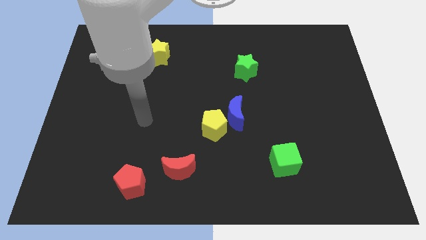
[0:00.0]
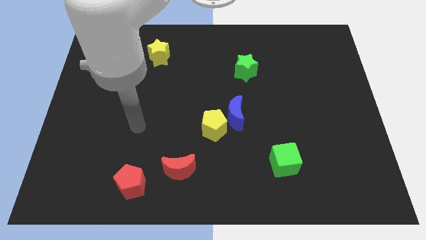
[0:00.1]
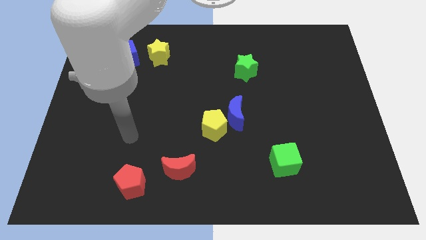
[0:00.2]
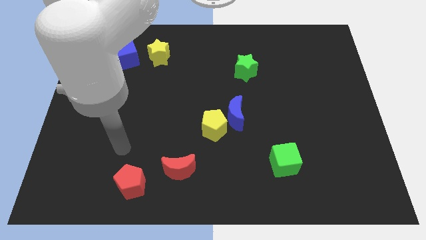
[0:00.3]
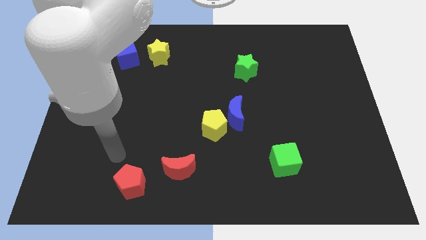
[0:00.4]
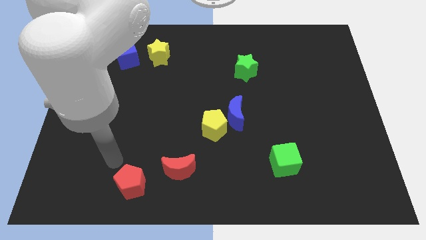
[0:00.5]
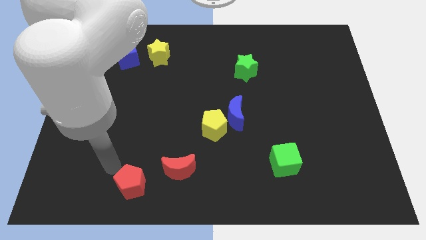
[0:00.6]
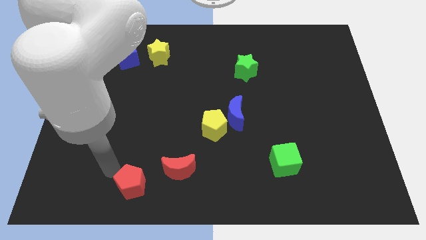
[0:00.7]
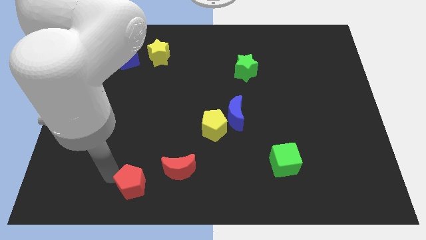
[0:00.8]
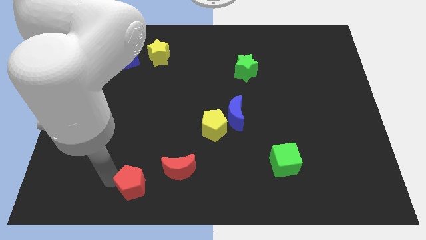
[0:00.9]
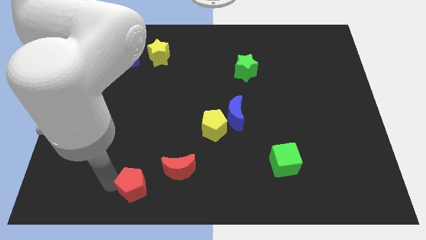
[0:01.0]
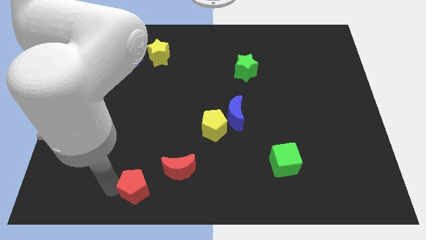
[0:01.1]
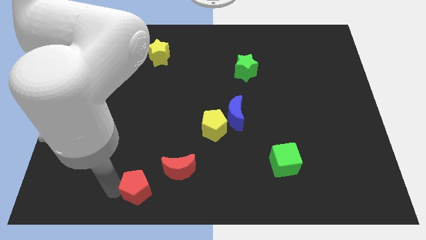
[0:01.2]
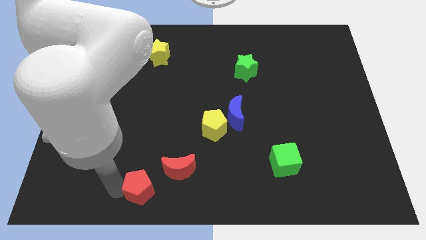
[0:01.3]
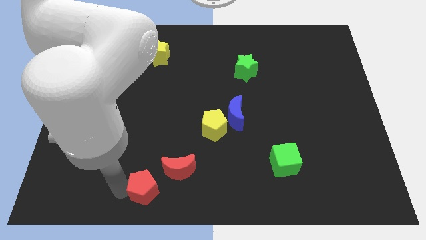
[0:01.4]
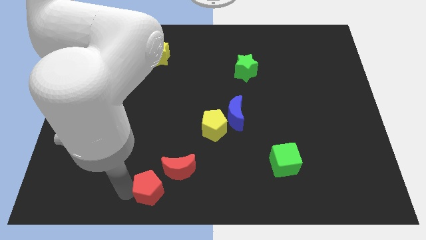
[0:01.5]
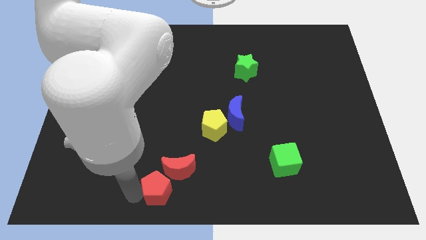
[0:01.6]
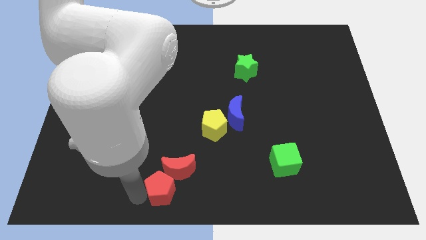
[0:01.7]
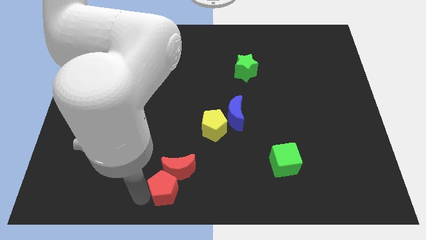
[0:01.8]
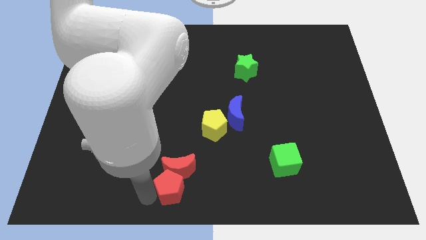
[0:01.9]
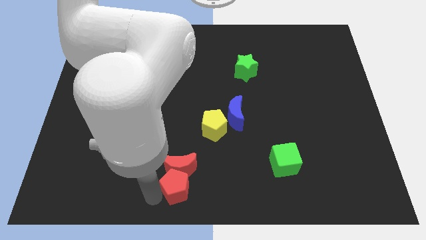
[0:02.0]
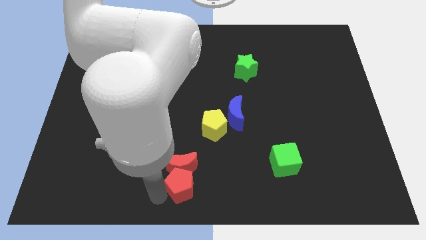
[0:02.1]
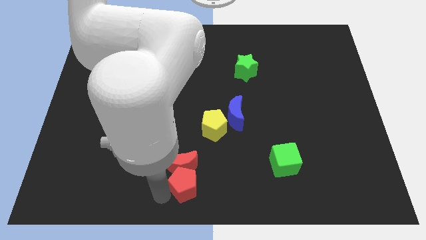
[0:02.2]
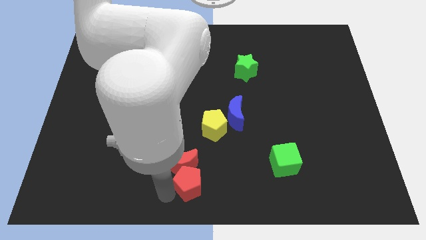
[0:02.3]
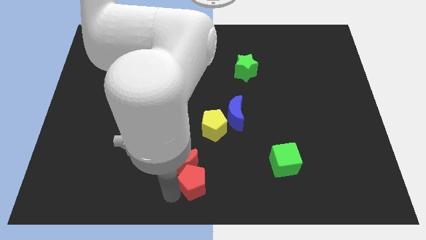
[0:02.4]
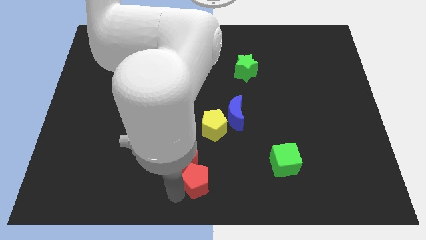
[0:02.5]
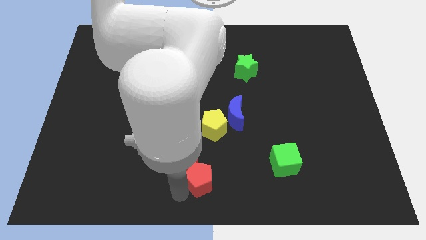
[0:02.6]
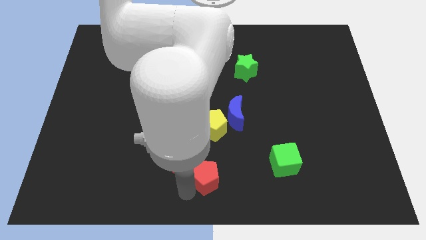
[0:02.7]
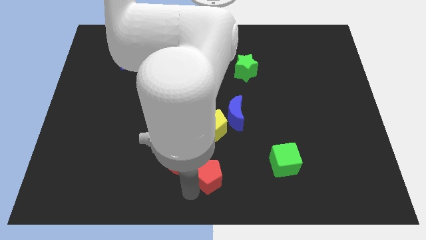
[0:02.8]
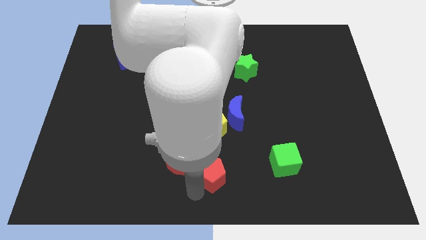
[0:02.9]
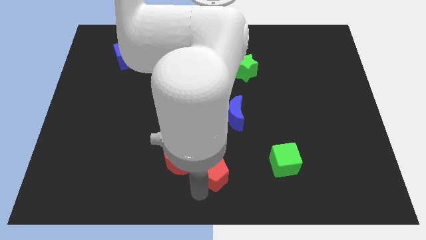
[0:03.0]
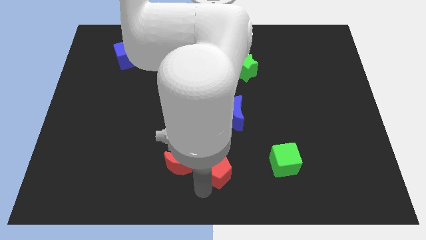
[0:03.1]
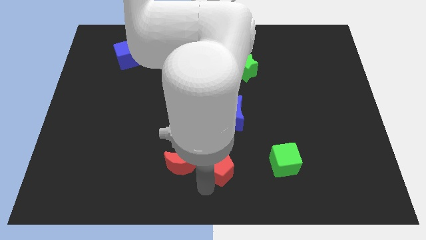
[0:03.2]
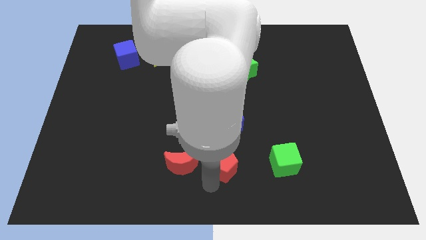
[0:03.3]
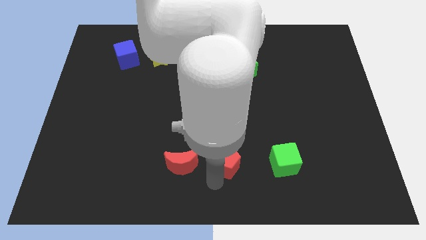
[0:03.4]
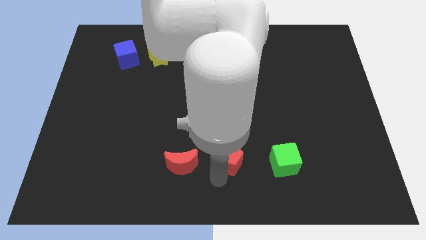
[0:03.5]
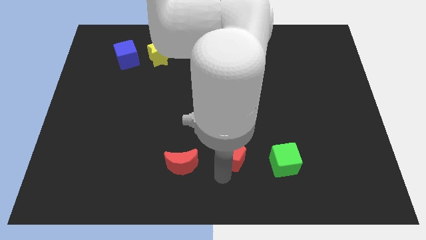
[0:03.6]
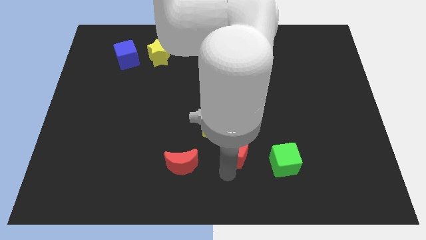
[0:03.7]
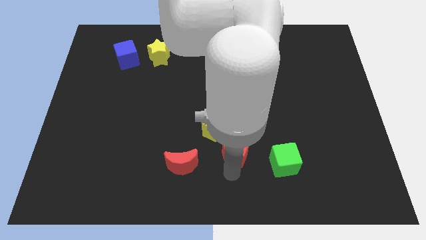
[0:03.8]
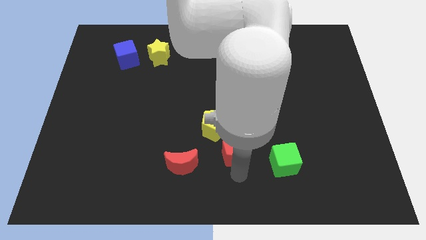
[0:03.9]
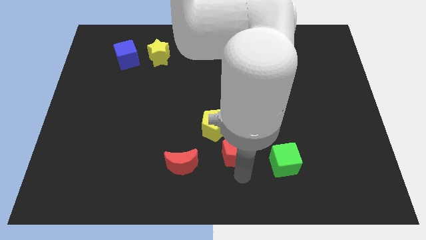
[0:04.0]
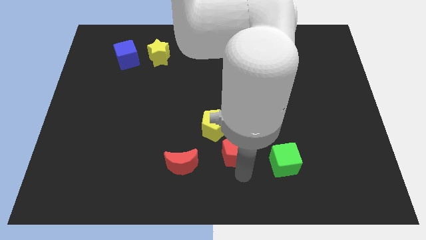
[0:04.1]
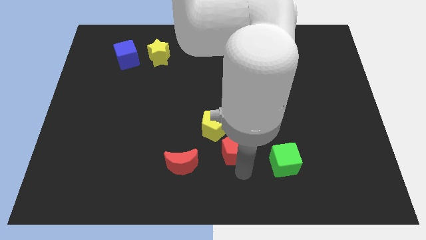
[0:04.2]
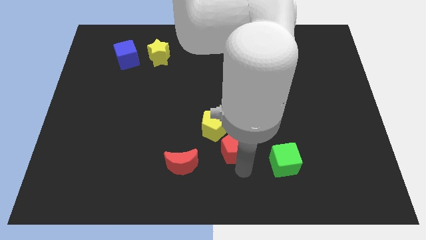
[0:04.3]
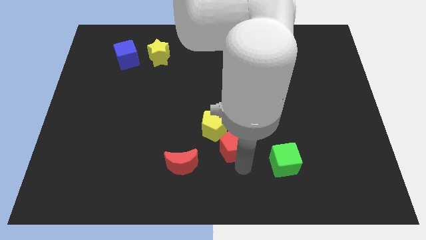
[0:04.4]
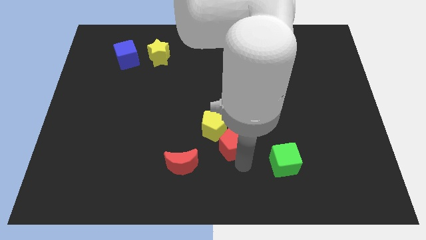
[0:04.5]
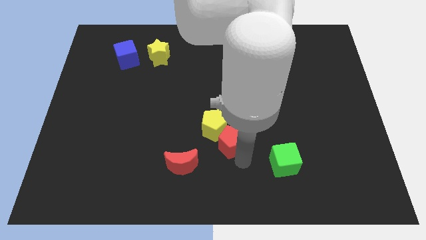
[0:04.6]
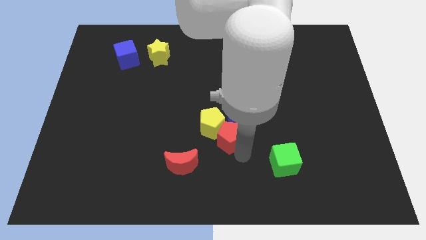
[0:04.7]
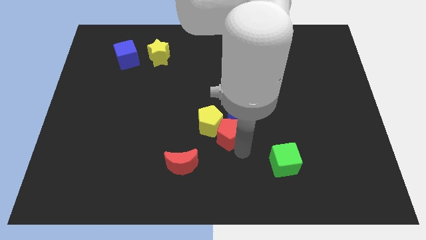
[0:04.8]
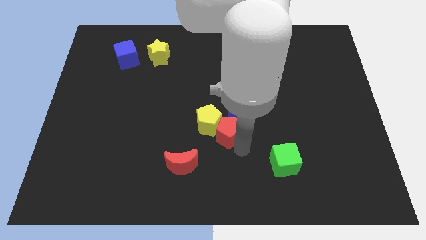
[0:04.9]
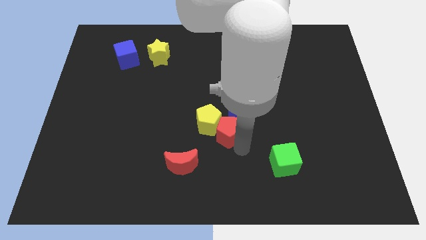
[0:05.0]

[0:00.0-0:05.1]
slide the red pentagon next to the blue moon

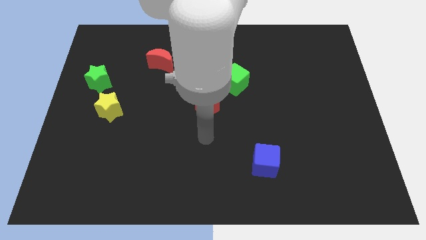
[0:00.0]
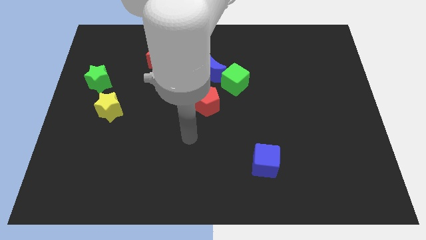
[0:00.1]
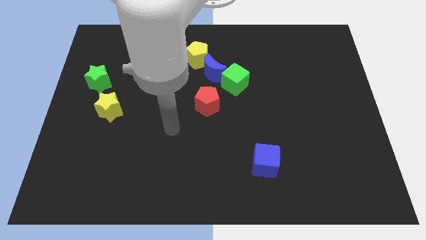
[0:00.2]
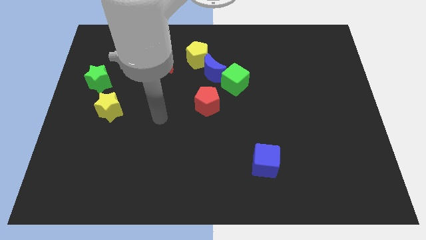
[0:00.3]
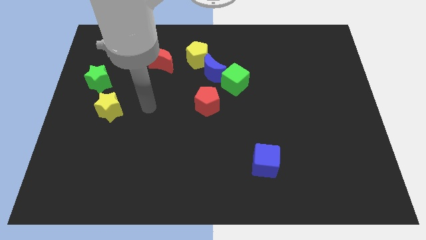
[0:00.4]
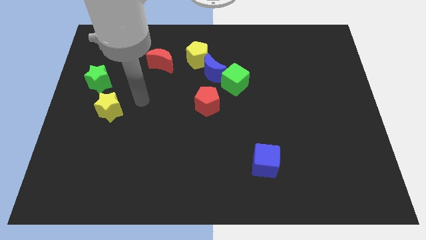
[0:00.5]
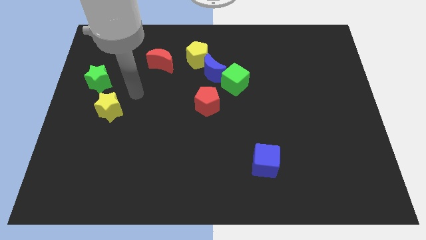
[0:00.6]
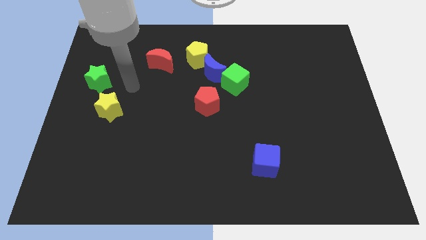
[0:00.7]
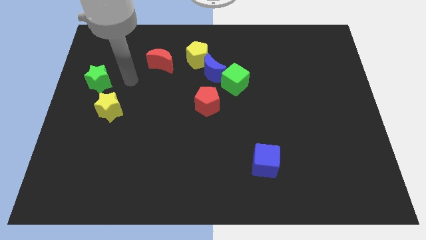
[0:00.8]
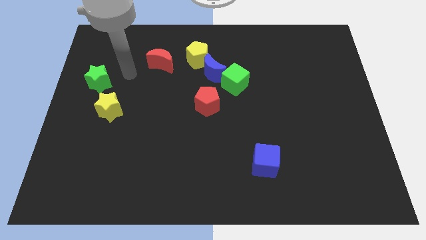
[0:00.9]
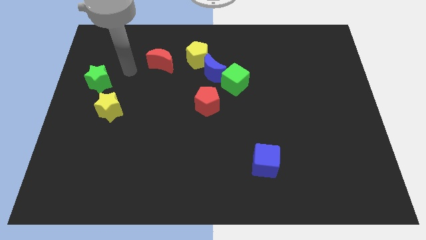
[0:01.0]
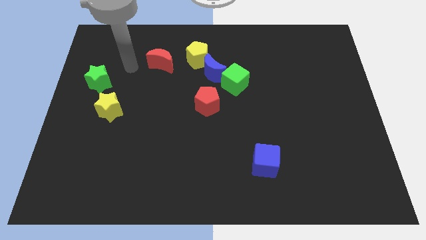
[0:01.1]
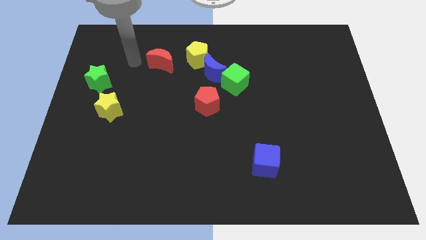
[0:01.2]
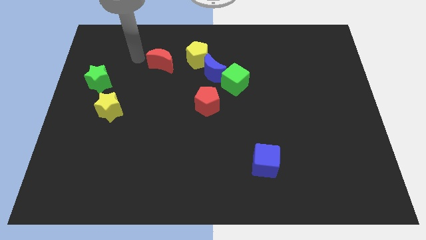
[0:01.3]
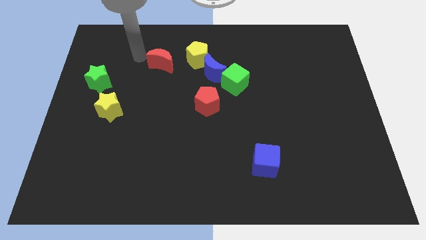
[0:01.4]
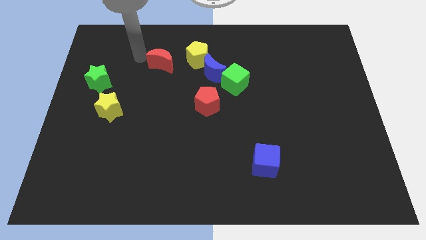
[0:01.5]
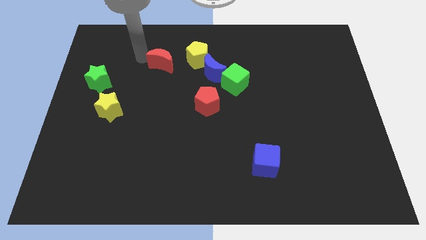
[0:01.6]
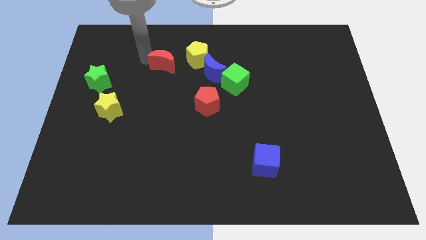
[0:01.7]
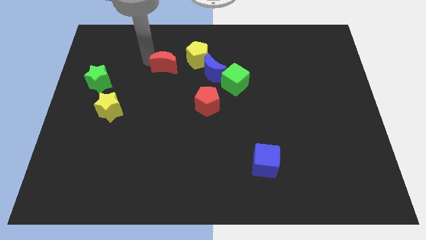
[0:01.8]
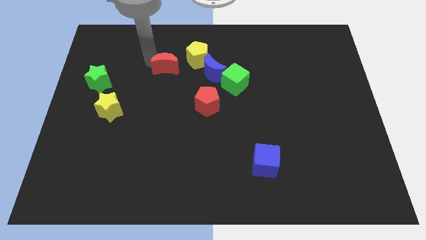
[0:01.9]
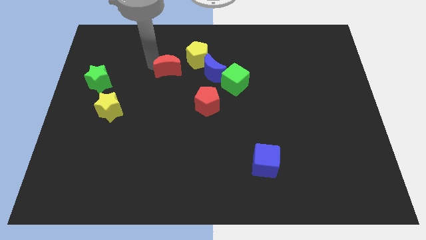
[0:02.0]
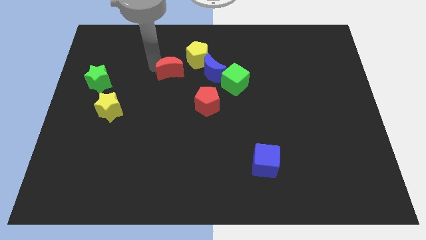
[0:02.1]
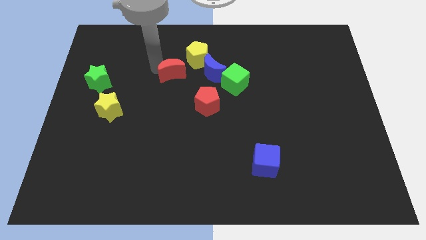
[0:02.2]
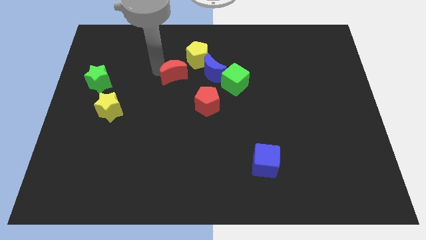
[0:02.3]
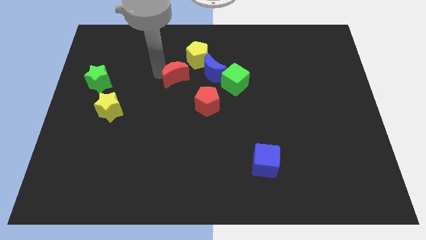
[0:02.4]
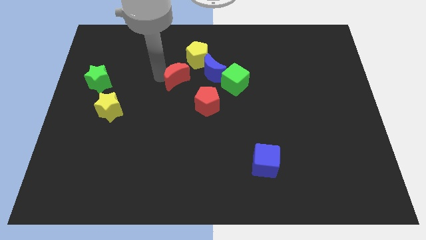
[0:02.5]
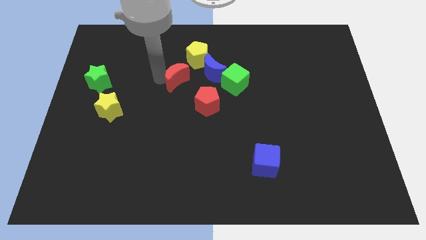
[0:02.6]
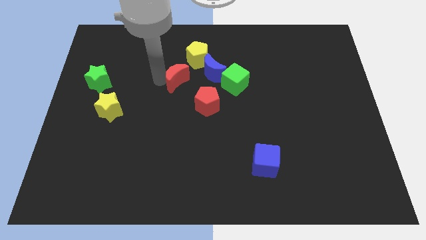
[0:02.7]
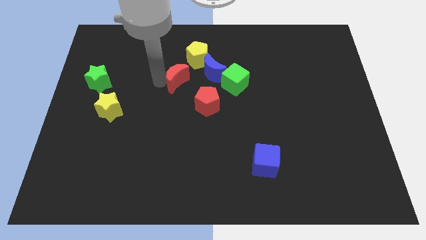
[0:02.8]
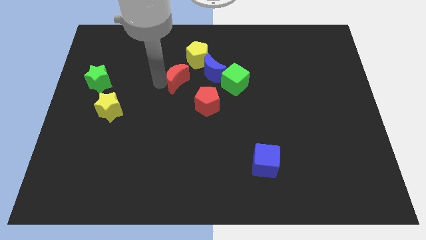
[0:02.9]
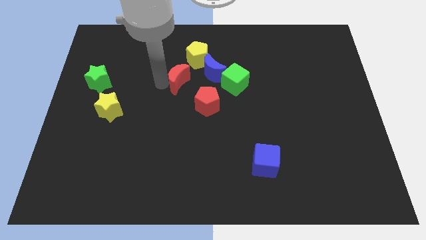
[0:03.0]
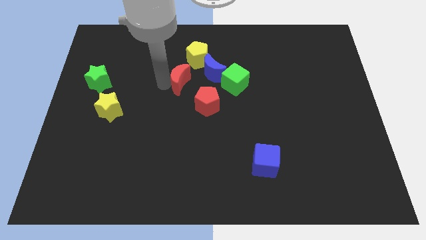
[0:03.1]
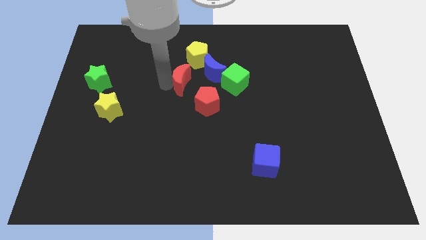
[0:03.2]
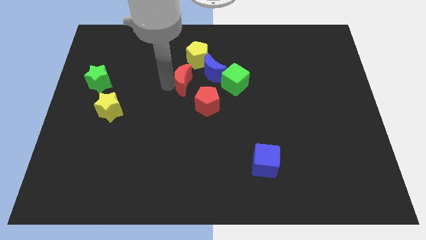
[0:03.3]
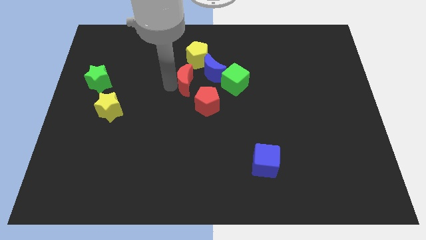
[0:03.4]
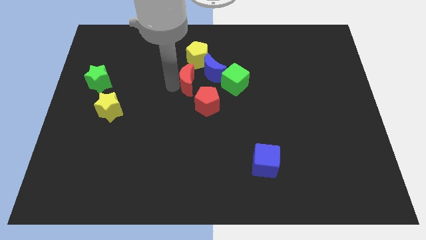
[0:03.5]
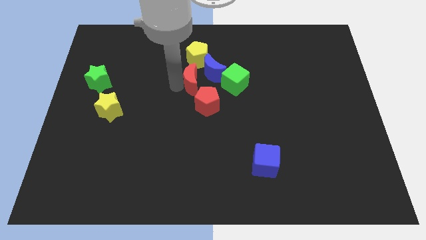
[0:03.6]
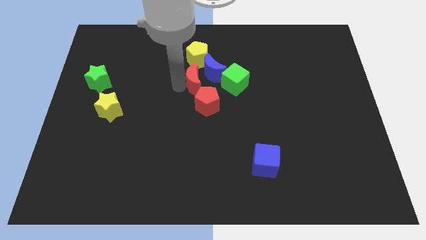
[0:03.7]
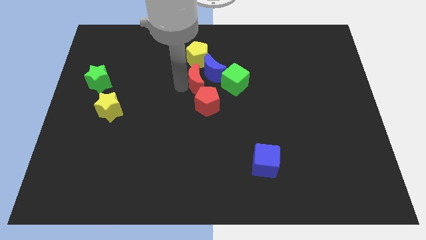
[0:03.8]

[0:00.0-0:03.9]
move the red moon to the blue moon
